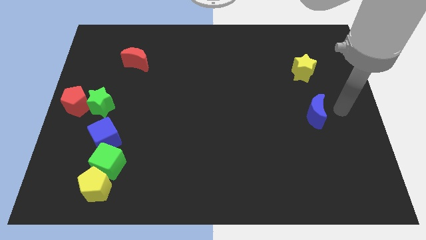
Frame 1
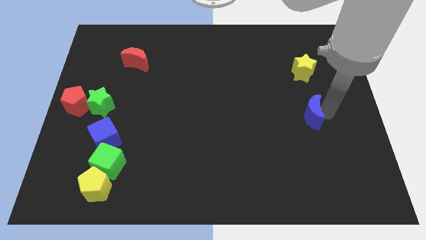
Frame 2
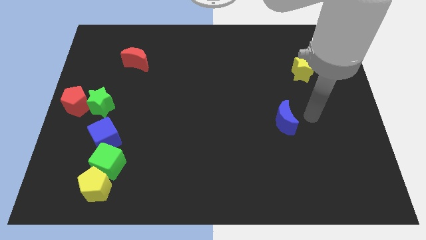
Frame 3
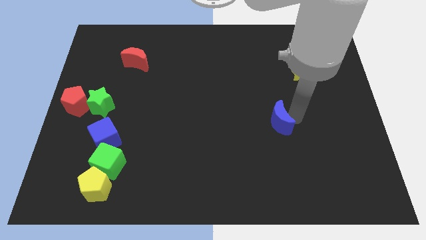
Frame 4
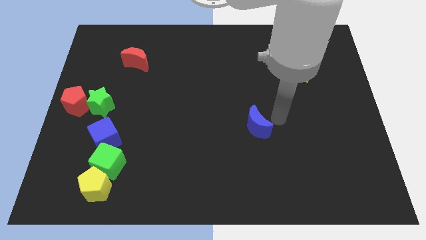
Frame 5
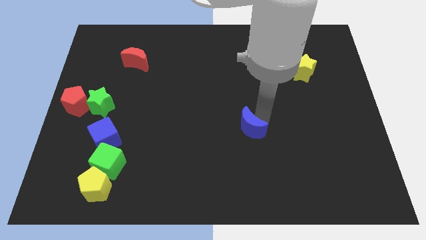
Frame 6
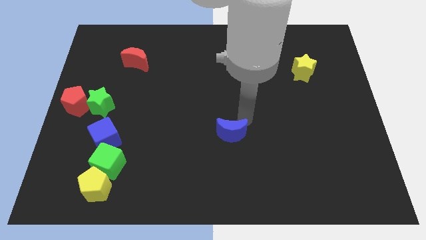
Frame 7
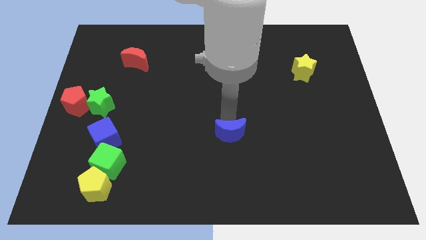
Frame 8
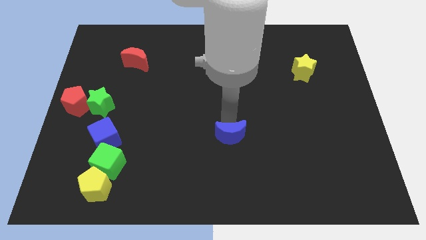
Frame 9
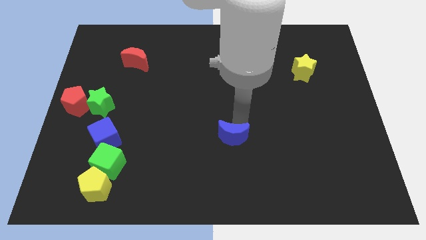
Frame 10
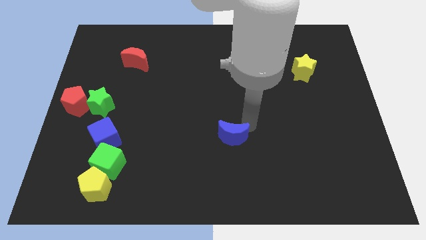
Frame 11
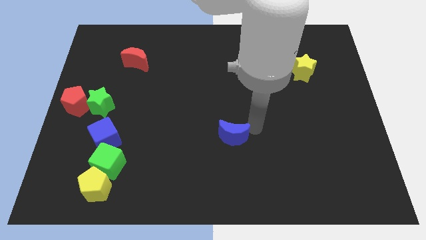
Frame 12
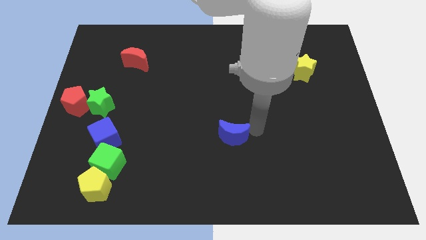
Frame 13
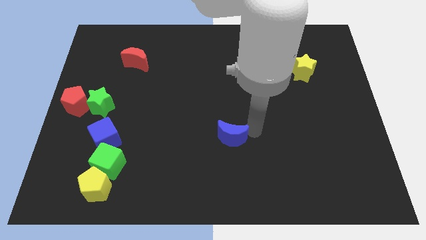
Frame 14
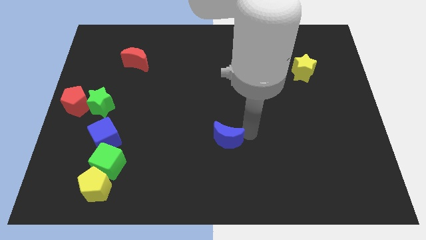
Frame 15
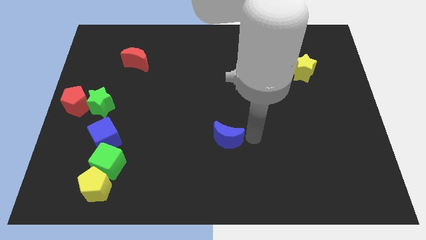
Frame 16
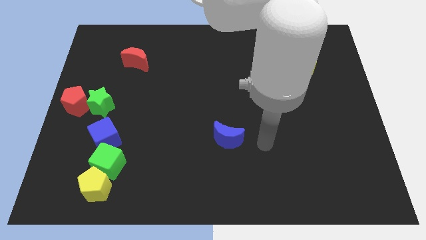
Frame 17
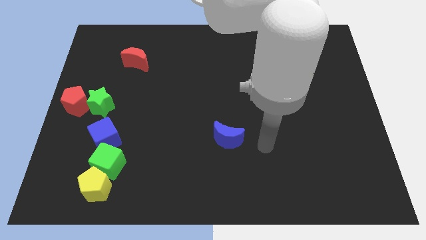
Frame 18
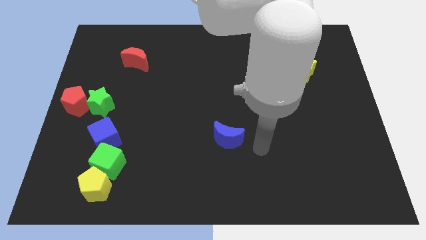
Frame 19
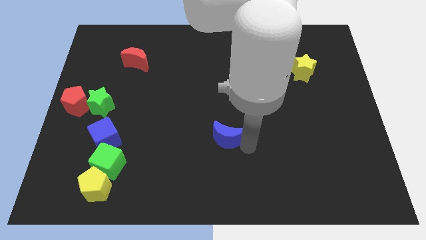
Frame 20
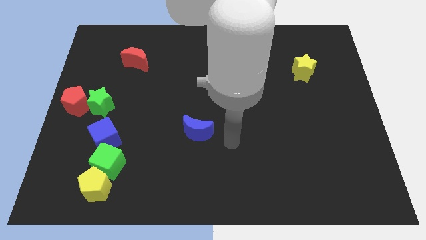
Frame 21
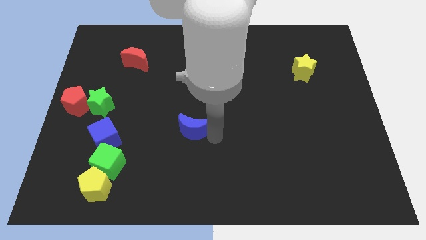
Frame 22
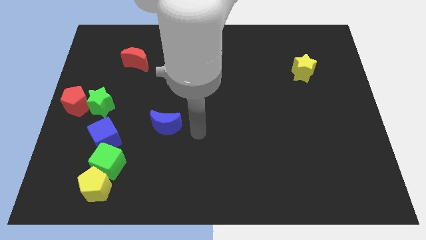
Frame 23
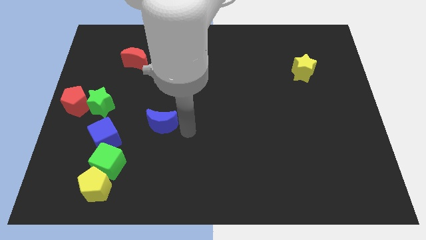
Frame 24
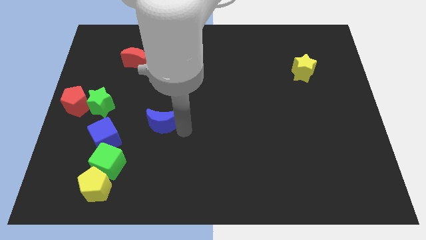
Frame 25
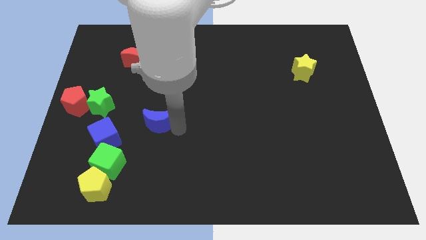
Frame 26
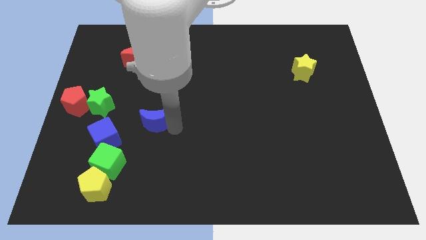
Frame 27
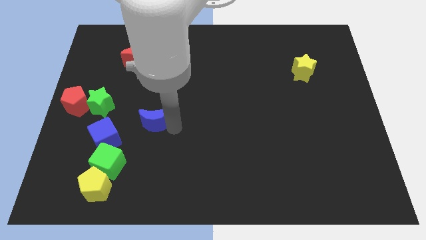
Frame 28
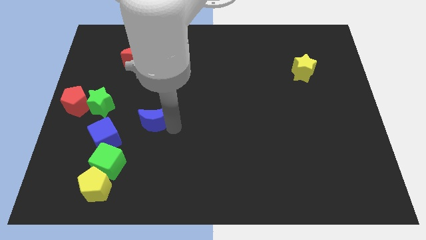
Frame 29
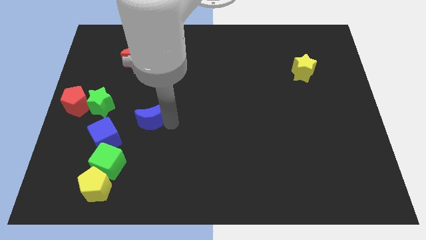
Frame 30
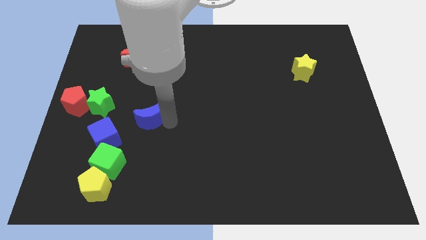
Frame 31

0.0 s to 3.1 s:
move blue moon towards blue cube

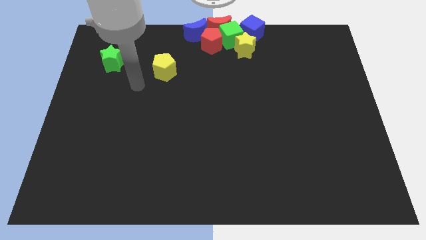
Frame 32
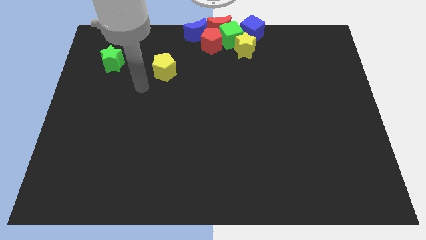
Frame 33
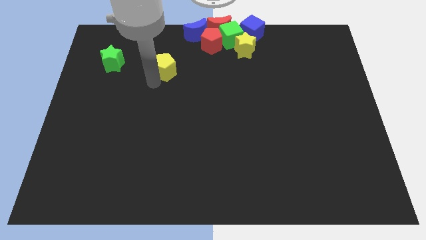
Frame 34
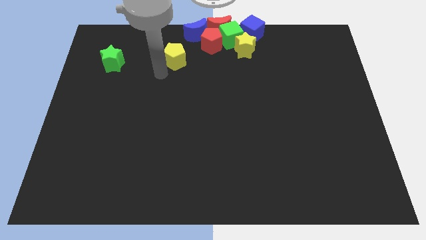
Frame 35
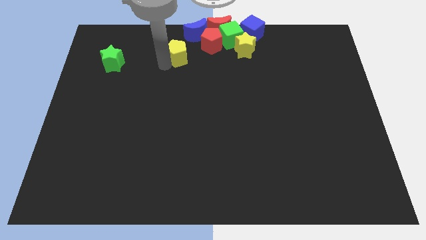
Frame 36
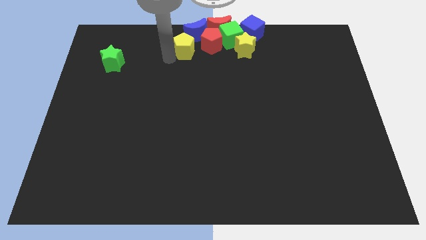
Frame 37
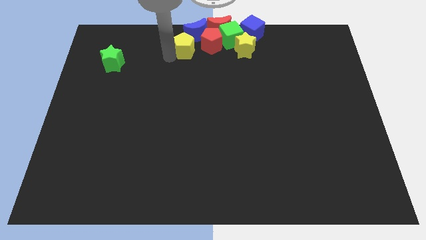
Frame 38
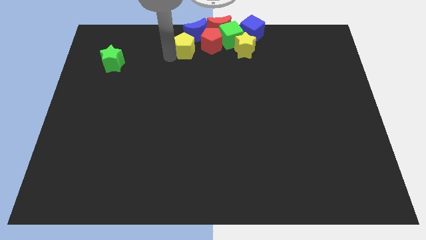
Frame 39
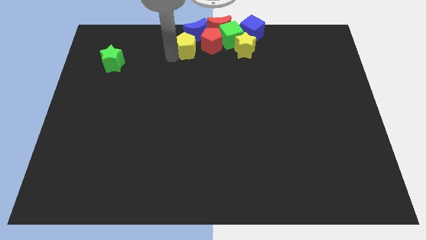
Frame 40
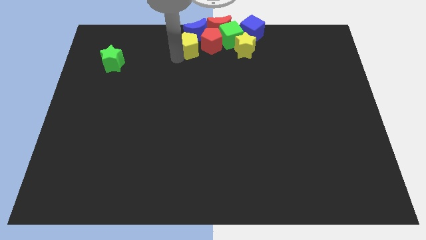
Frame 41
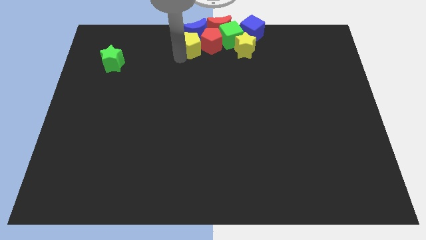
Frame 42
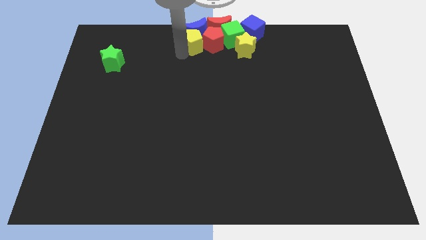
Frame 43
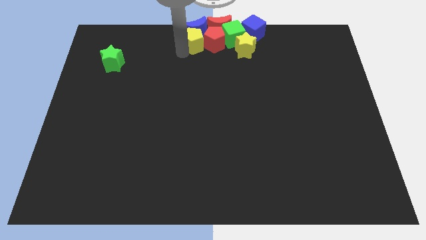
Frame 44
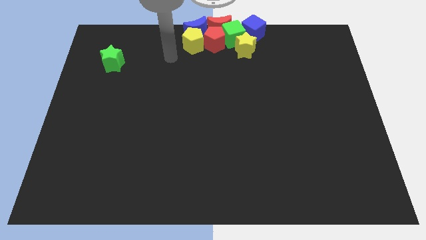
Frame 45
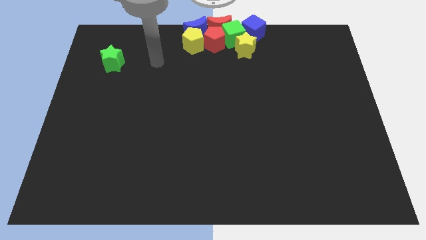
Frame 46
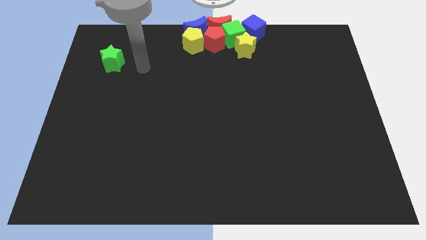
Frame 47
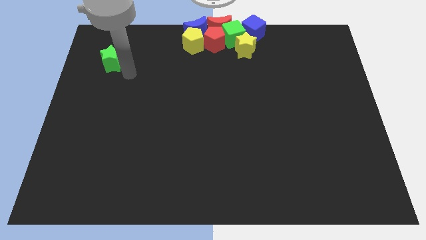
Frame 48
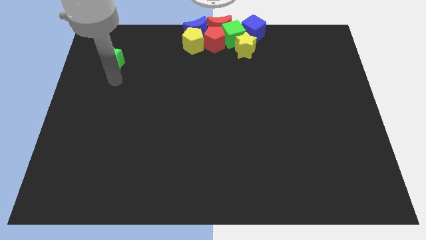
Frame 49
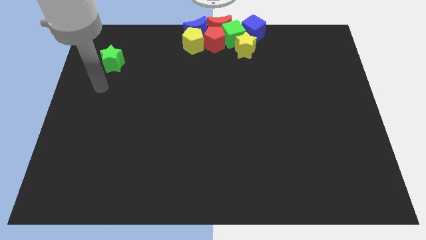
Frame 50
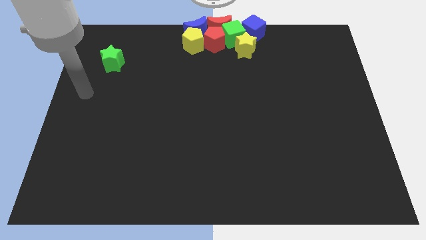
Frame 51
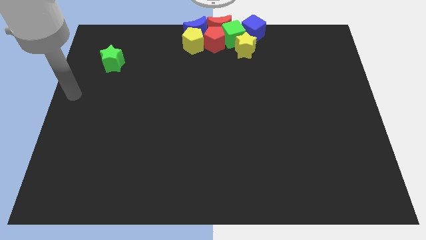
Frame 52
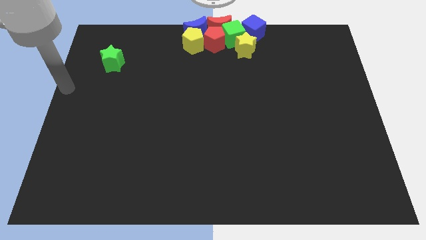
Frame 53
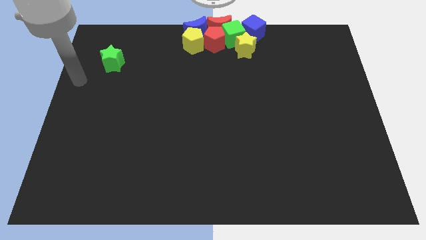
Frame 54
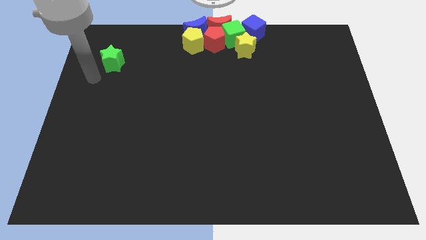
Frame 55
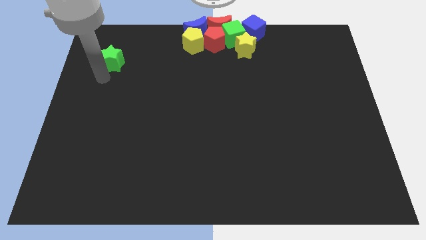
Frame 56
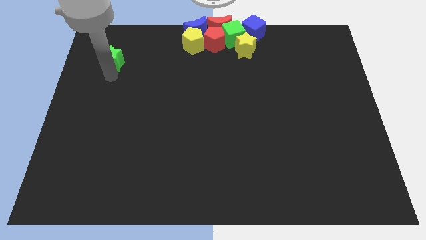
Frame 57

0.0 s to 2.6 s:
place yellow pentagon left to red pentagon

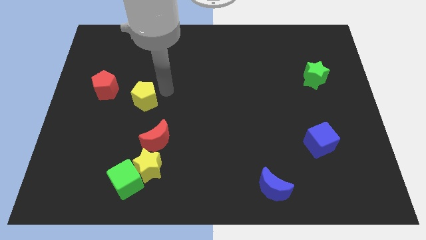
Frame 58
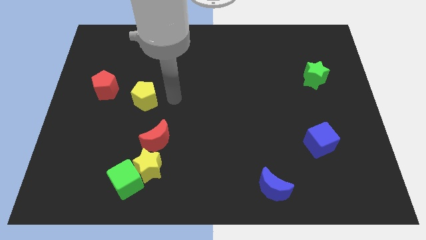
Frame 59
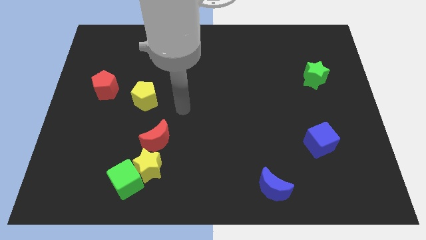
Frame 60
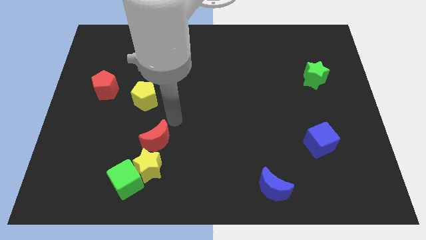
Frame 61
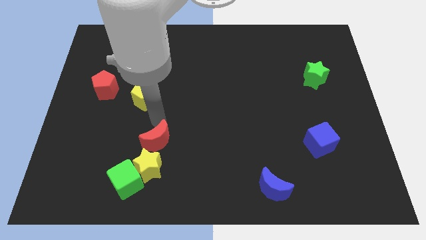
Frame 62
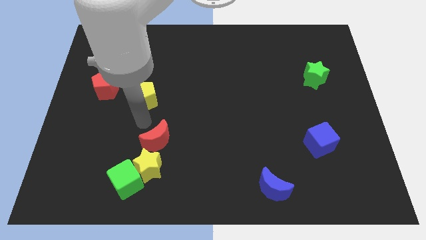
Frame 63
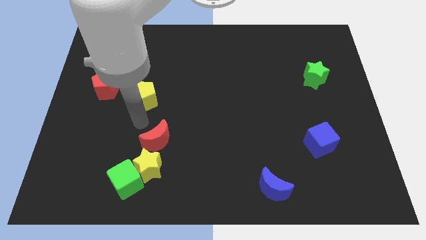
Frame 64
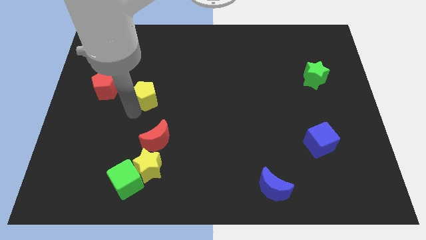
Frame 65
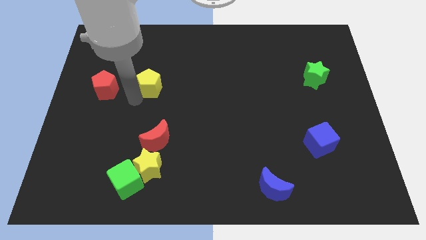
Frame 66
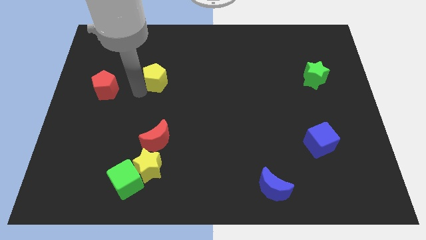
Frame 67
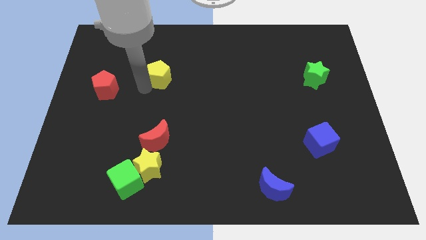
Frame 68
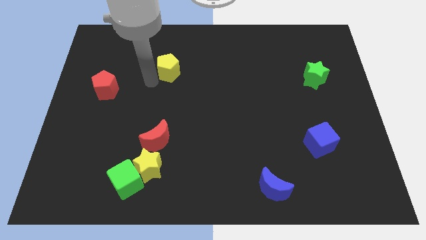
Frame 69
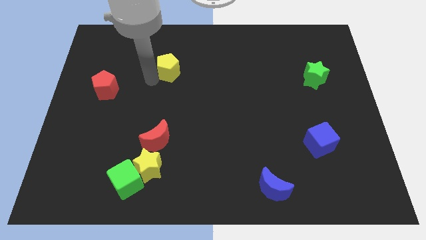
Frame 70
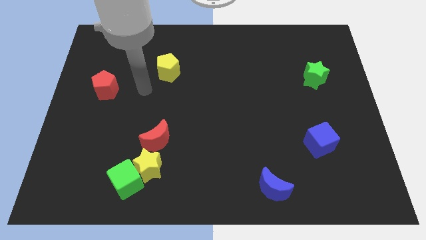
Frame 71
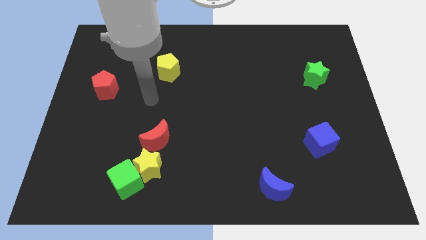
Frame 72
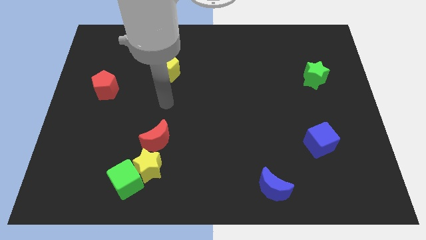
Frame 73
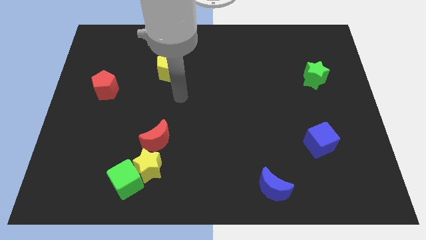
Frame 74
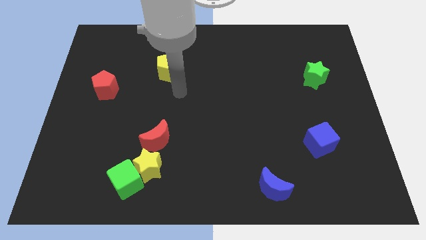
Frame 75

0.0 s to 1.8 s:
push the yellow pentagon upwards

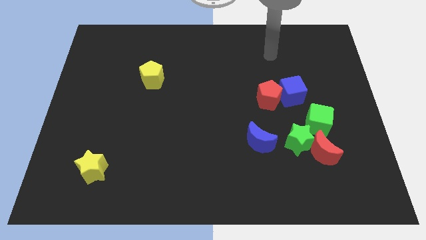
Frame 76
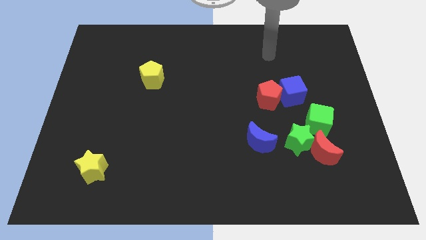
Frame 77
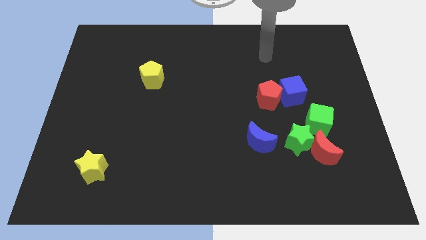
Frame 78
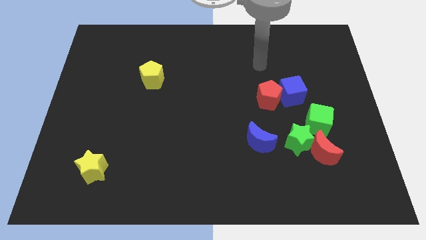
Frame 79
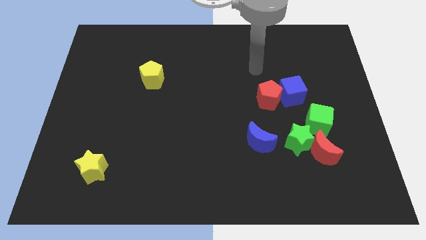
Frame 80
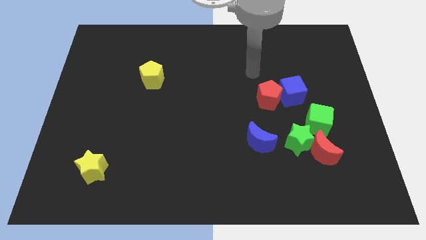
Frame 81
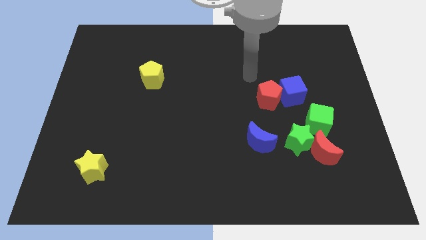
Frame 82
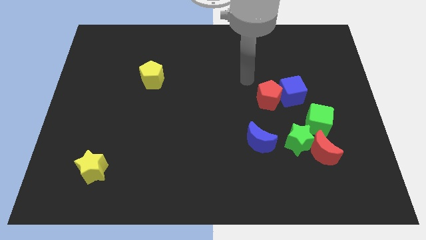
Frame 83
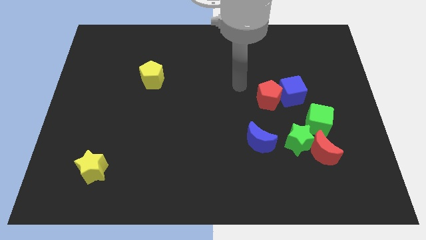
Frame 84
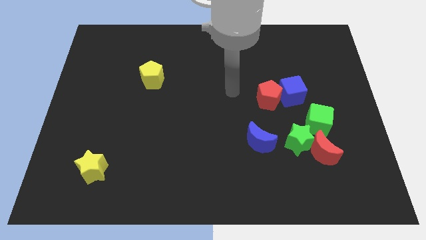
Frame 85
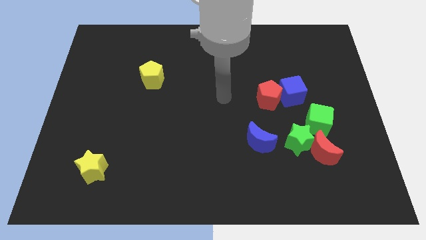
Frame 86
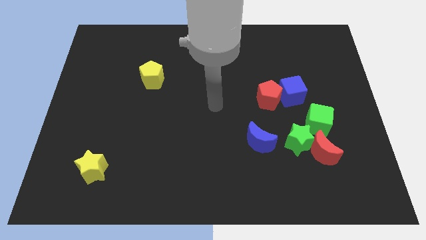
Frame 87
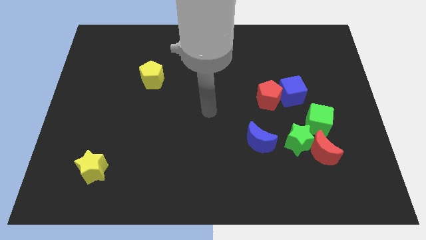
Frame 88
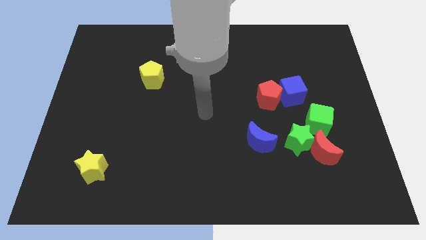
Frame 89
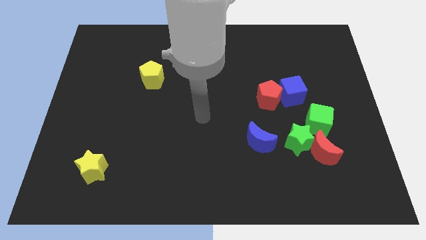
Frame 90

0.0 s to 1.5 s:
place your hand in between the yellow pentagon and blue moon
